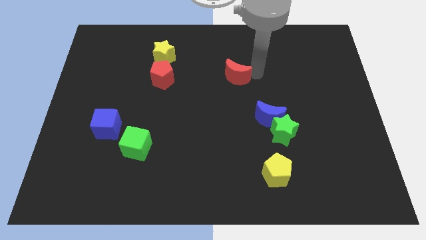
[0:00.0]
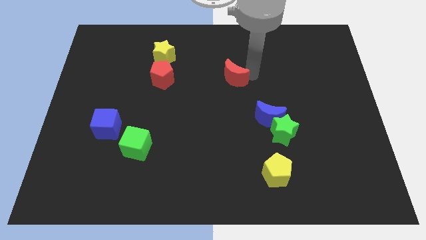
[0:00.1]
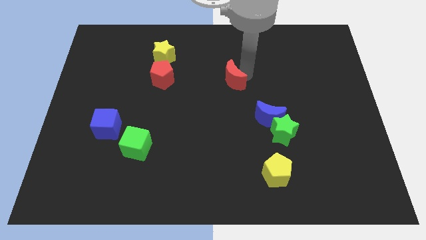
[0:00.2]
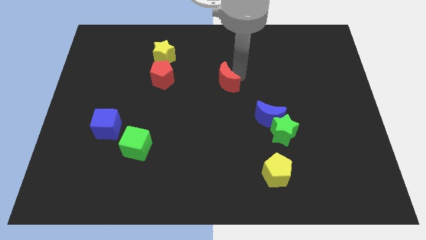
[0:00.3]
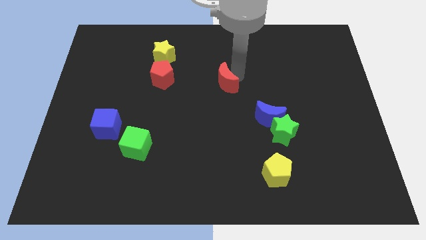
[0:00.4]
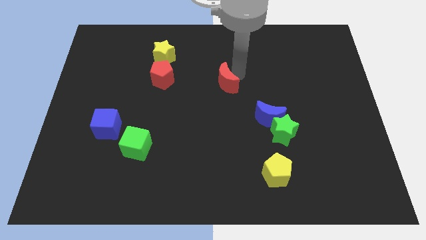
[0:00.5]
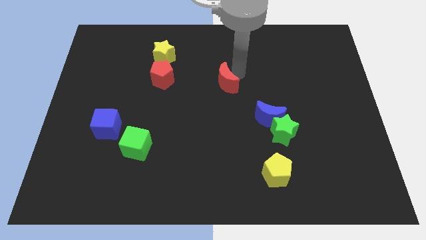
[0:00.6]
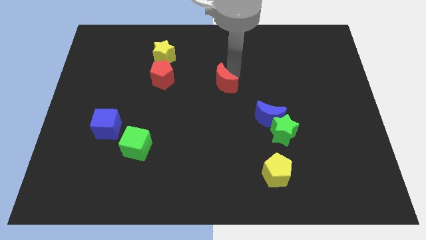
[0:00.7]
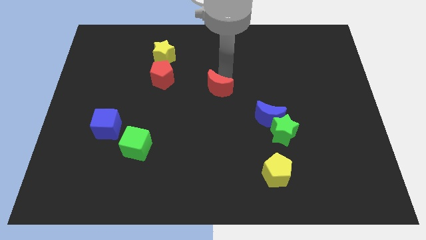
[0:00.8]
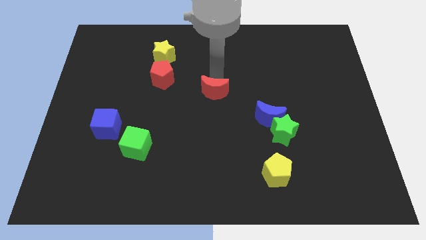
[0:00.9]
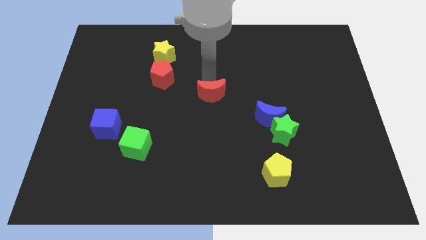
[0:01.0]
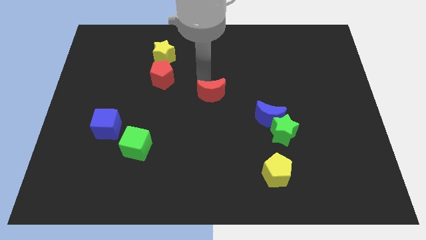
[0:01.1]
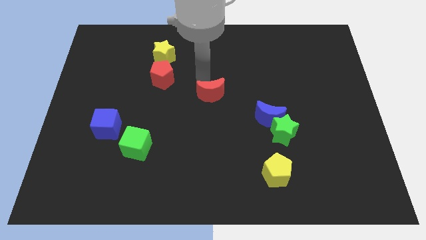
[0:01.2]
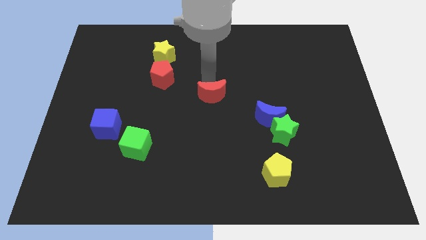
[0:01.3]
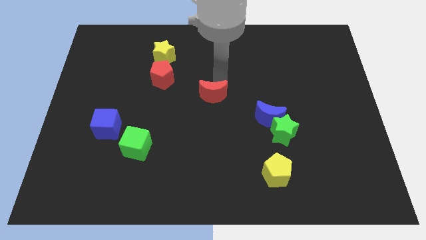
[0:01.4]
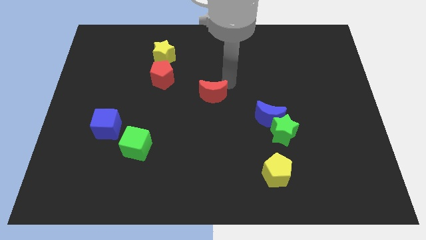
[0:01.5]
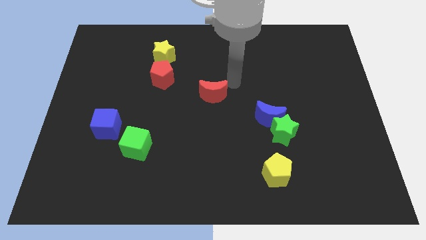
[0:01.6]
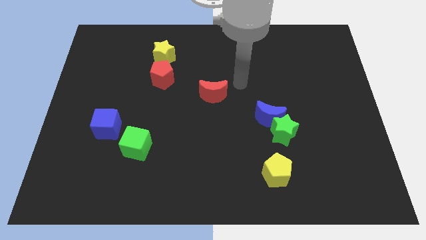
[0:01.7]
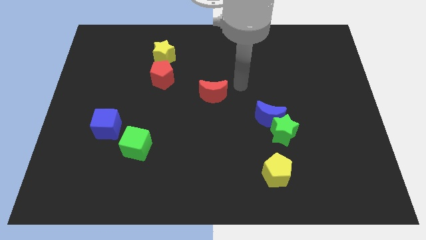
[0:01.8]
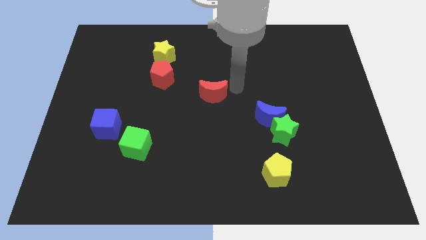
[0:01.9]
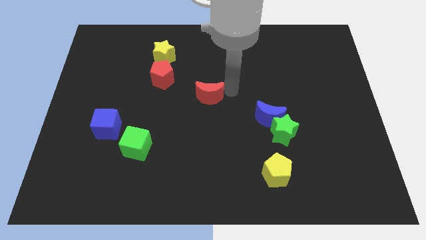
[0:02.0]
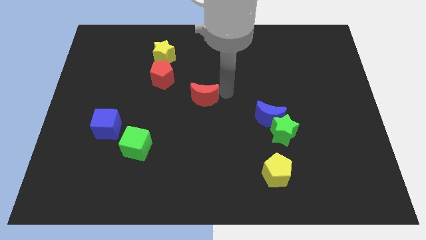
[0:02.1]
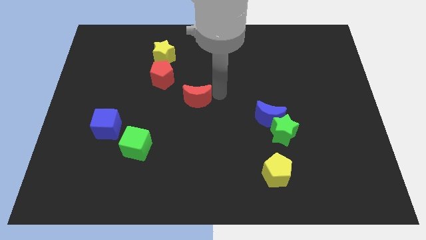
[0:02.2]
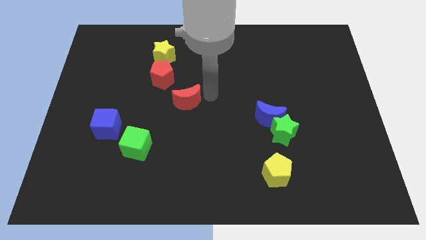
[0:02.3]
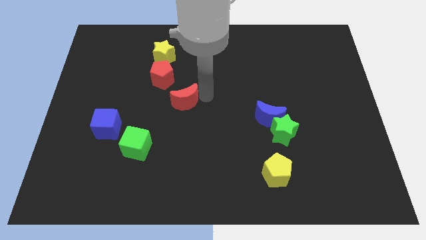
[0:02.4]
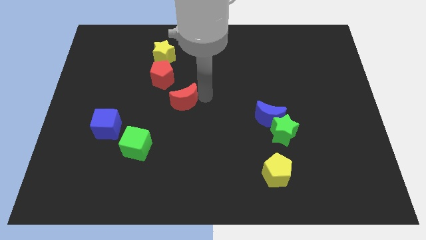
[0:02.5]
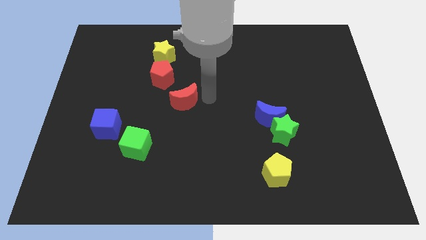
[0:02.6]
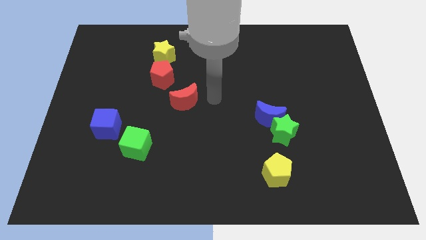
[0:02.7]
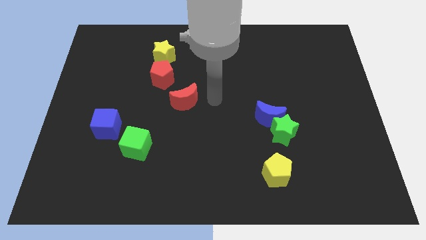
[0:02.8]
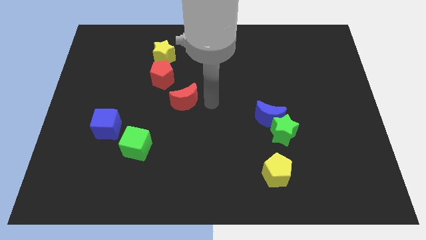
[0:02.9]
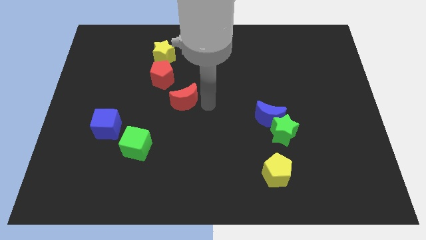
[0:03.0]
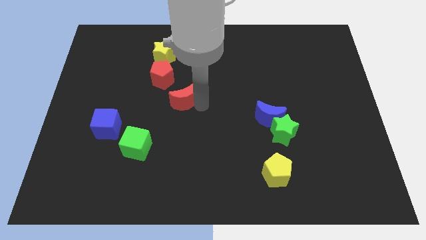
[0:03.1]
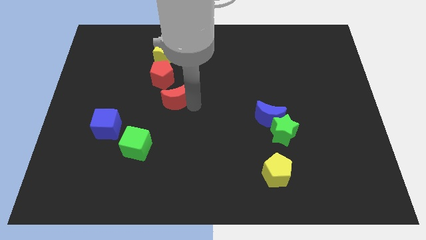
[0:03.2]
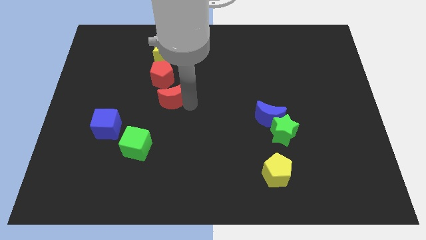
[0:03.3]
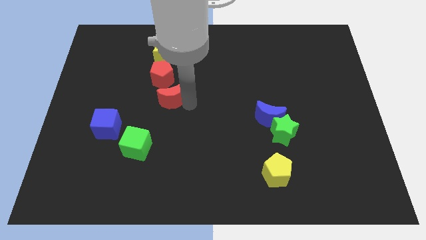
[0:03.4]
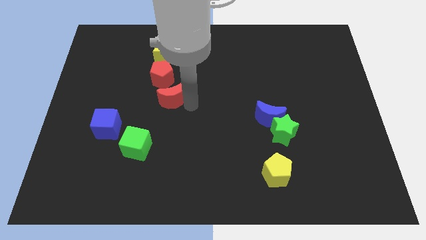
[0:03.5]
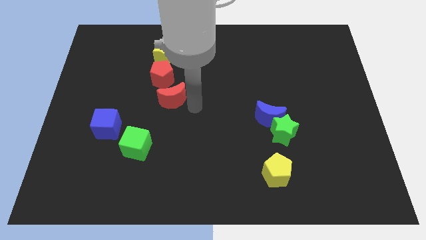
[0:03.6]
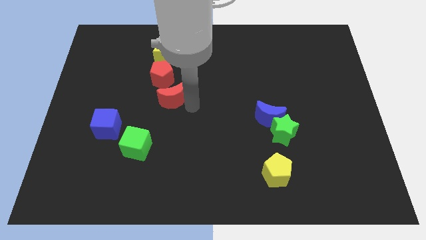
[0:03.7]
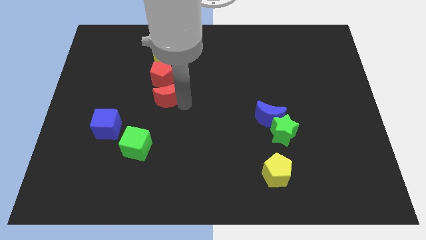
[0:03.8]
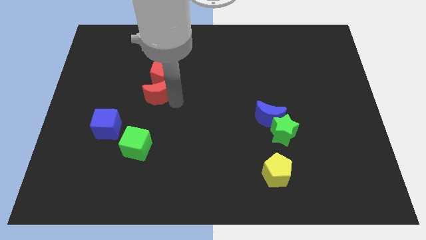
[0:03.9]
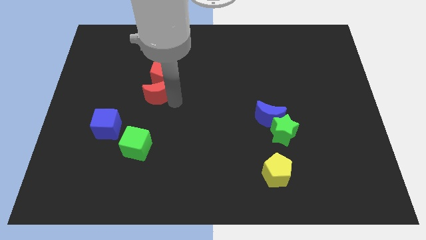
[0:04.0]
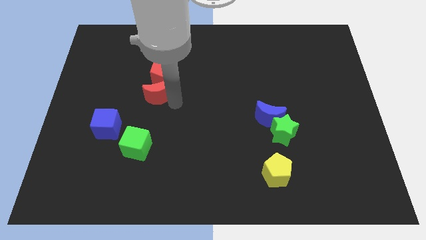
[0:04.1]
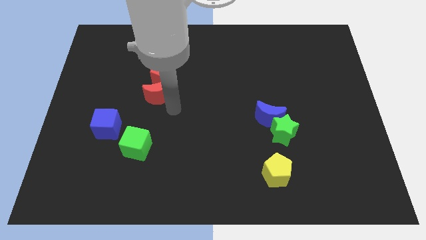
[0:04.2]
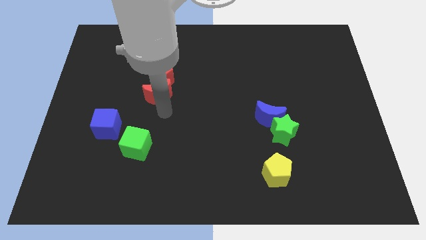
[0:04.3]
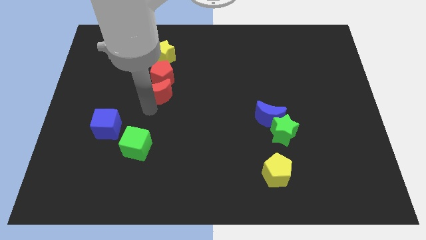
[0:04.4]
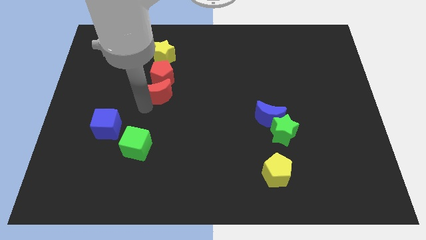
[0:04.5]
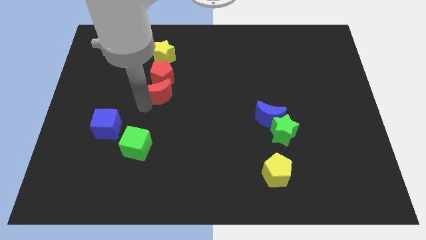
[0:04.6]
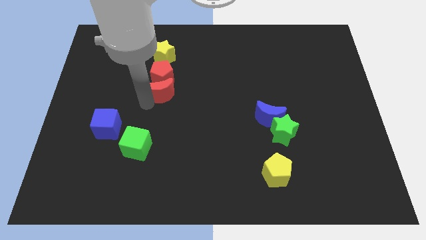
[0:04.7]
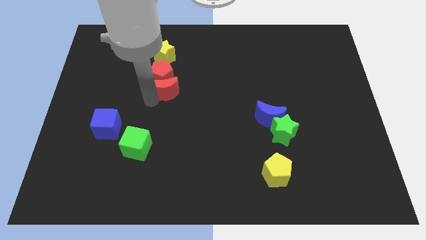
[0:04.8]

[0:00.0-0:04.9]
place the red moon vertical to the red pentagon

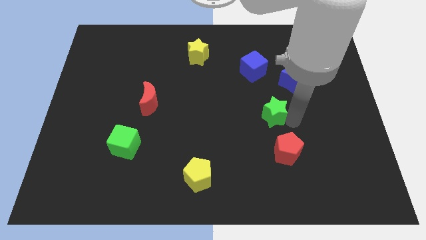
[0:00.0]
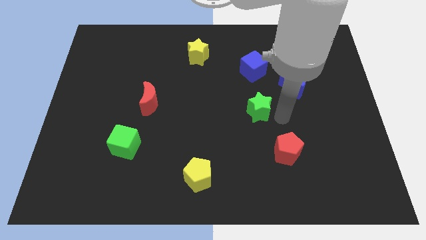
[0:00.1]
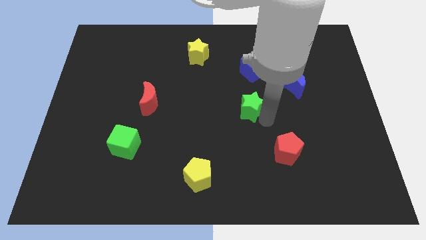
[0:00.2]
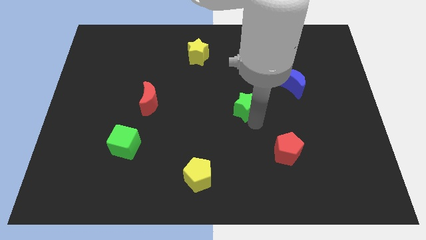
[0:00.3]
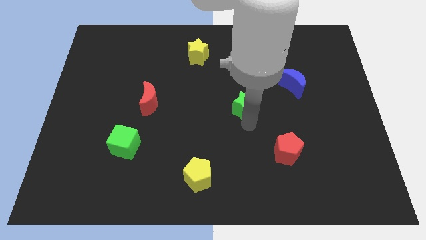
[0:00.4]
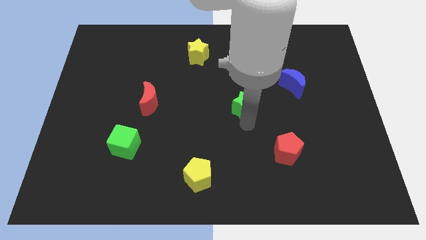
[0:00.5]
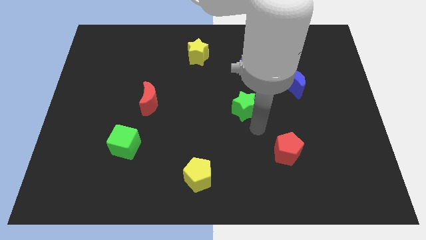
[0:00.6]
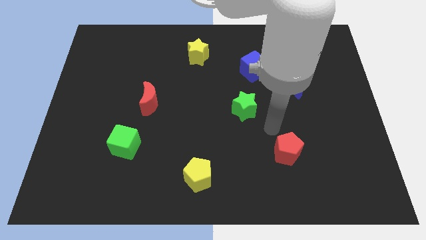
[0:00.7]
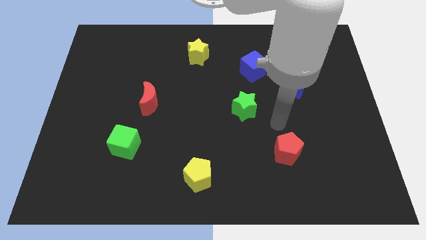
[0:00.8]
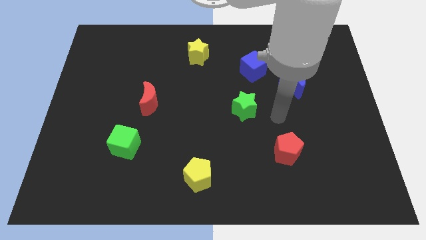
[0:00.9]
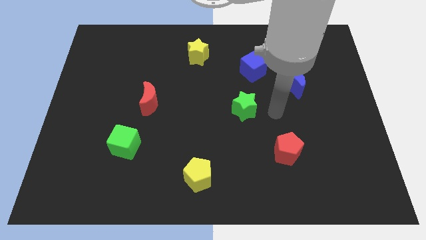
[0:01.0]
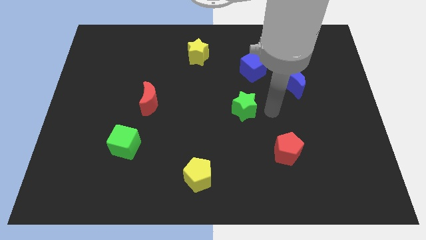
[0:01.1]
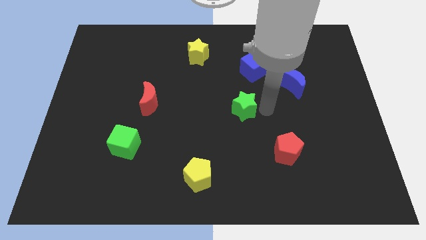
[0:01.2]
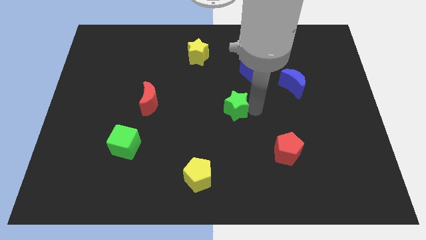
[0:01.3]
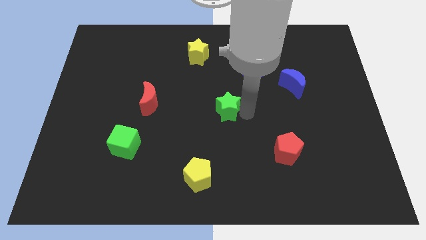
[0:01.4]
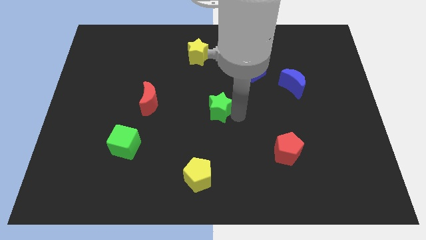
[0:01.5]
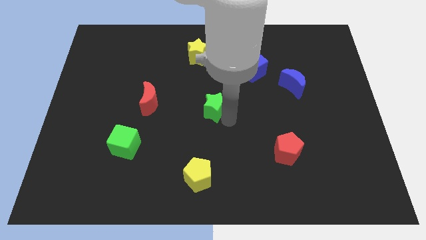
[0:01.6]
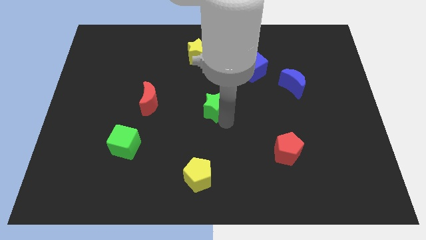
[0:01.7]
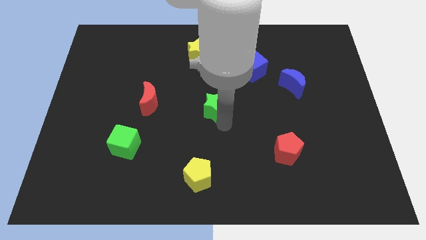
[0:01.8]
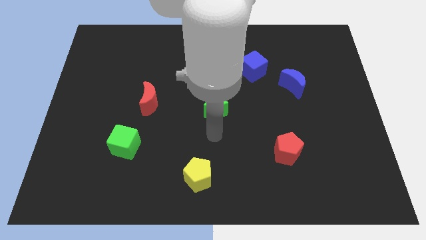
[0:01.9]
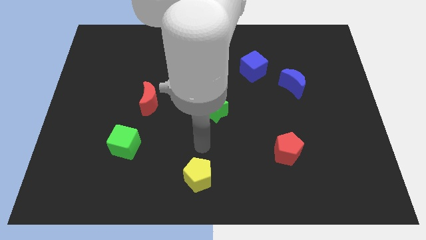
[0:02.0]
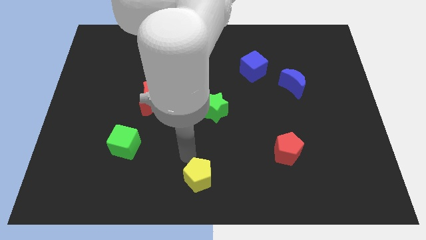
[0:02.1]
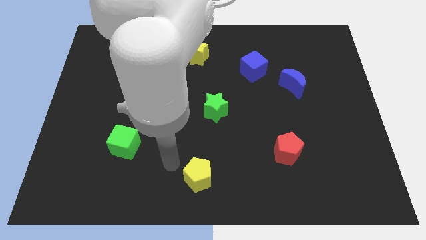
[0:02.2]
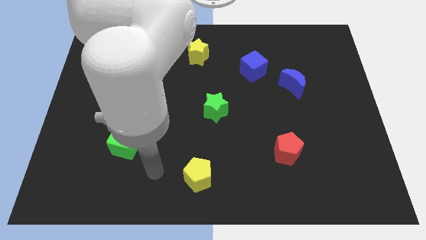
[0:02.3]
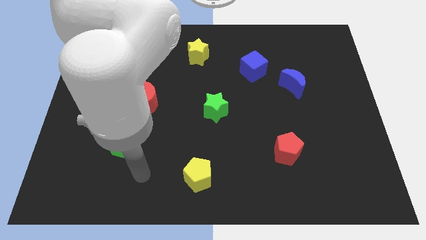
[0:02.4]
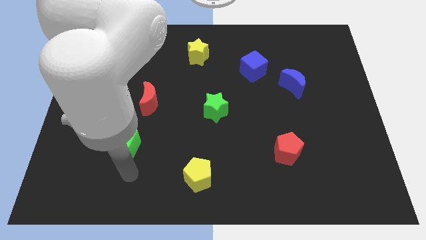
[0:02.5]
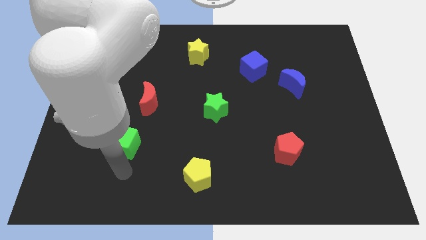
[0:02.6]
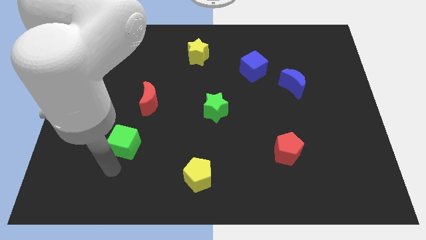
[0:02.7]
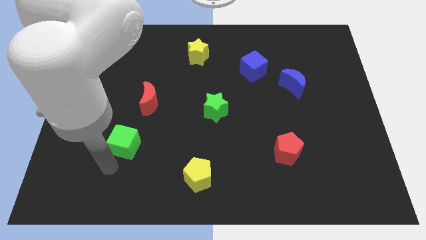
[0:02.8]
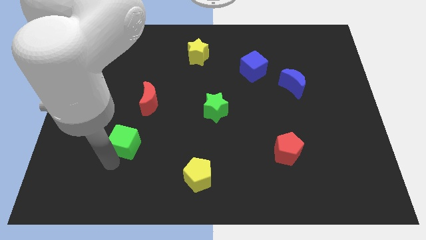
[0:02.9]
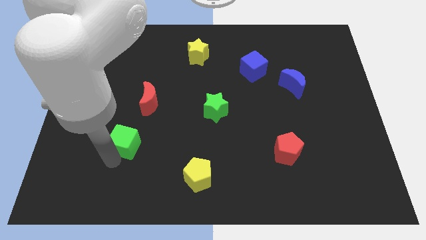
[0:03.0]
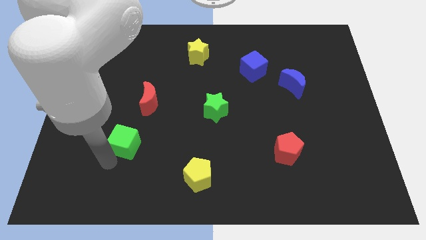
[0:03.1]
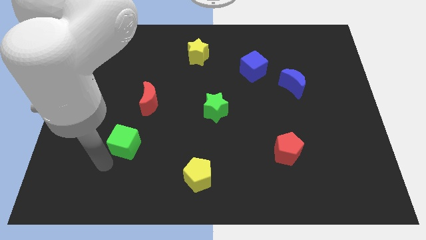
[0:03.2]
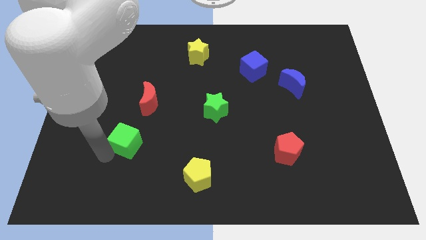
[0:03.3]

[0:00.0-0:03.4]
place the green star diagonally bottom left to the blue cube

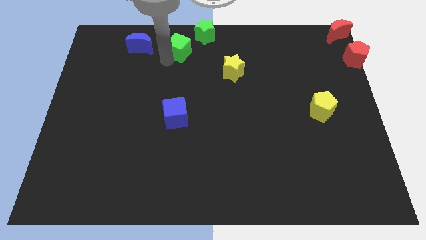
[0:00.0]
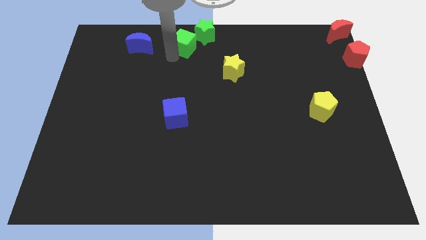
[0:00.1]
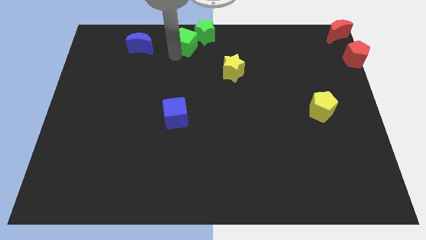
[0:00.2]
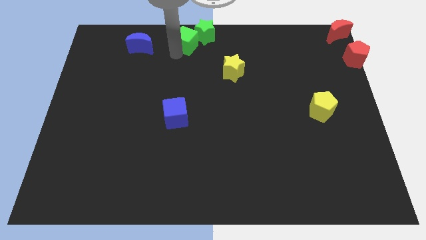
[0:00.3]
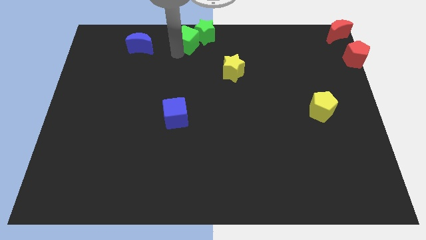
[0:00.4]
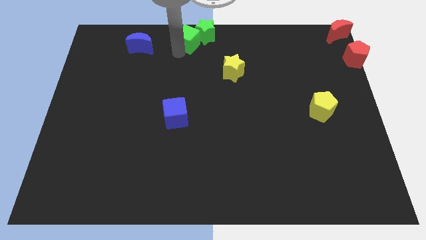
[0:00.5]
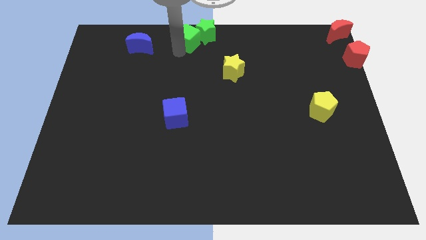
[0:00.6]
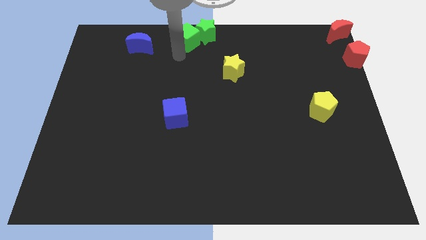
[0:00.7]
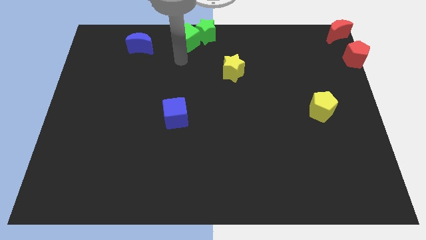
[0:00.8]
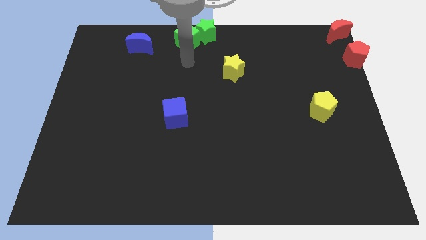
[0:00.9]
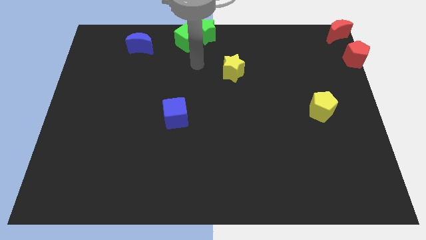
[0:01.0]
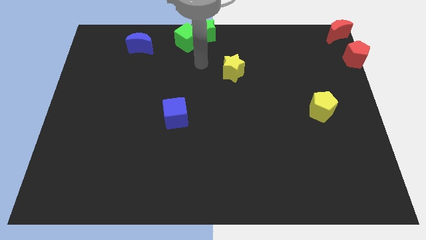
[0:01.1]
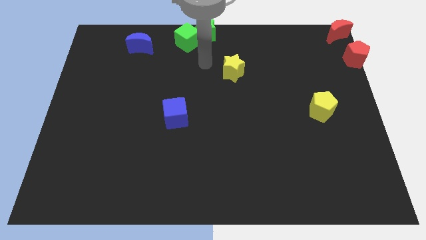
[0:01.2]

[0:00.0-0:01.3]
push the green cube away from the blue crescent
